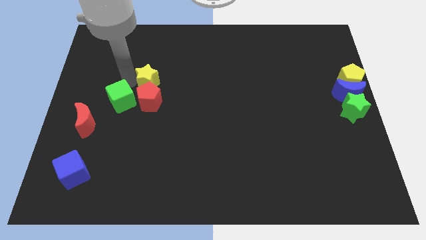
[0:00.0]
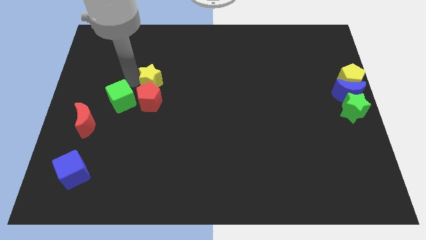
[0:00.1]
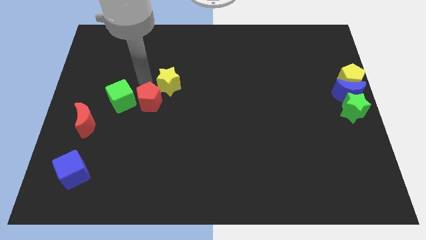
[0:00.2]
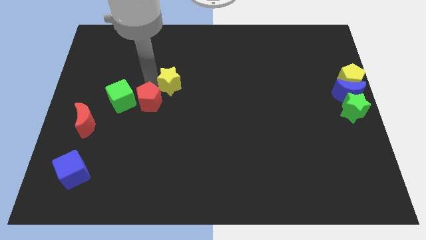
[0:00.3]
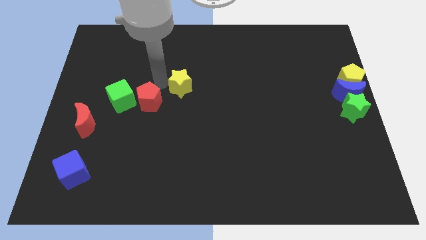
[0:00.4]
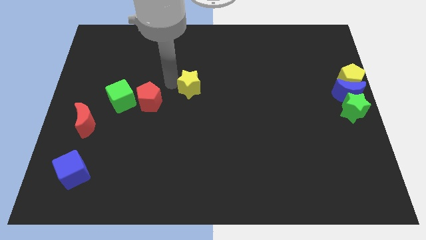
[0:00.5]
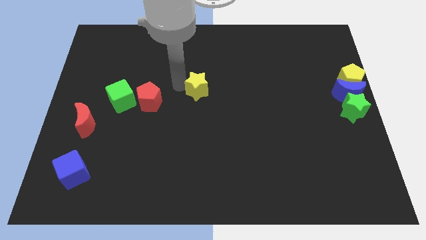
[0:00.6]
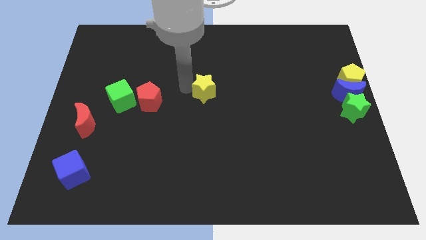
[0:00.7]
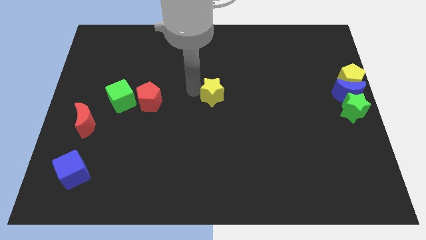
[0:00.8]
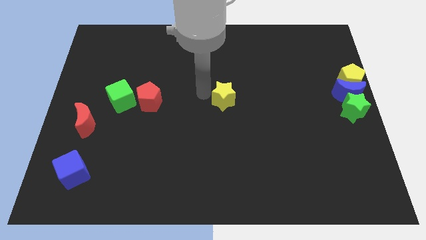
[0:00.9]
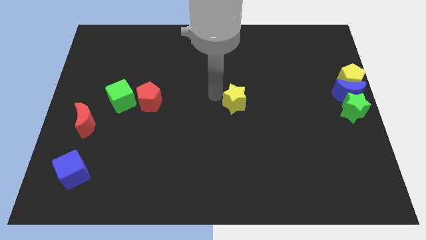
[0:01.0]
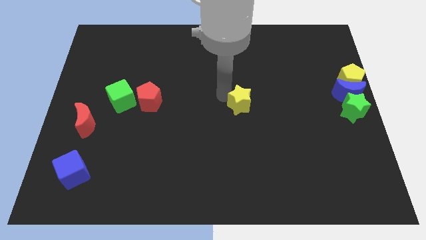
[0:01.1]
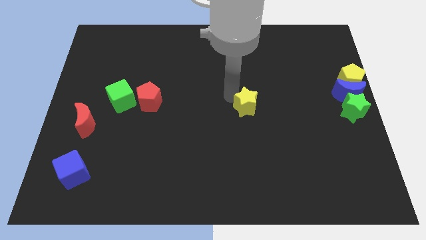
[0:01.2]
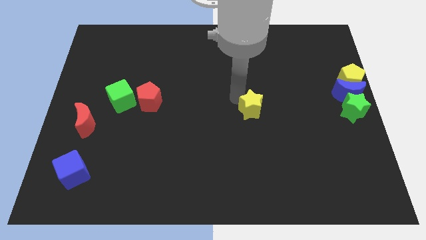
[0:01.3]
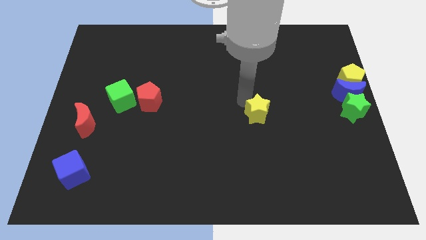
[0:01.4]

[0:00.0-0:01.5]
separate yellow star from the red pentagon

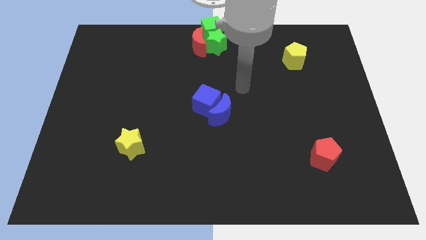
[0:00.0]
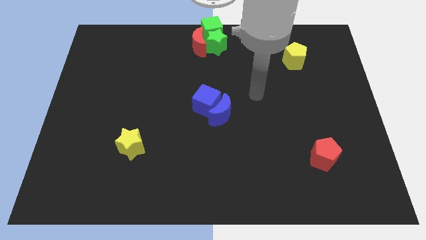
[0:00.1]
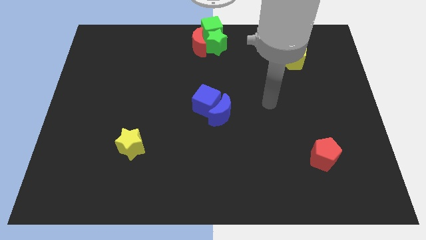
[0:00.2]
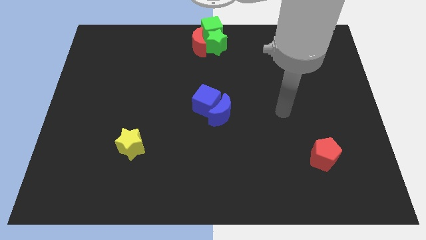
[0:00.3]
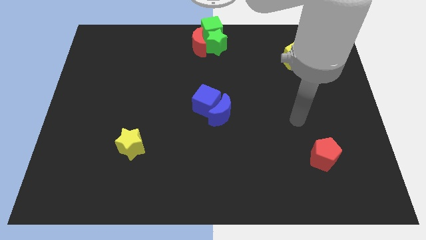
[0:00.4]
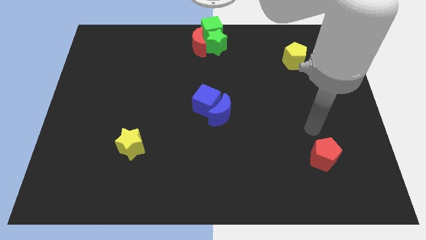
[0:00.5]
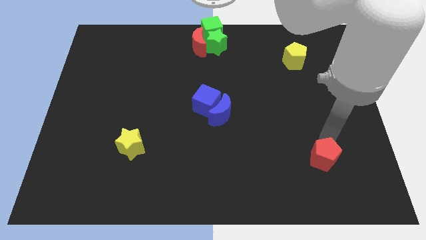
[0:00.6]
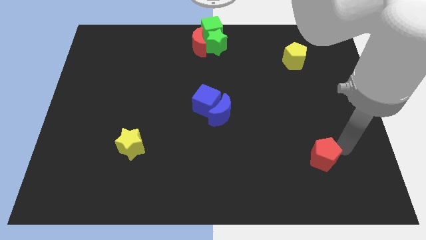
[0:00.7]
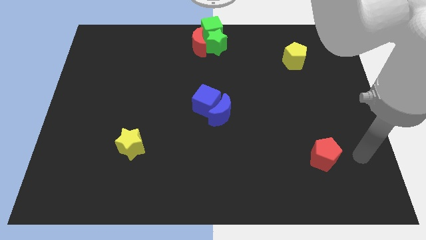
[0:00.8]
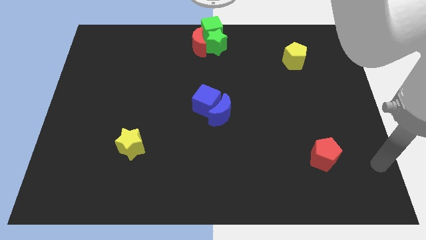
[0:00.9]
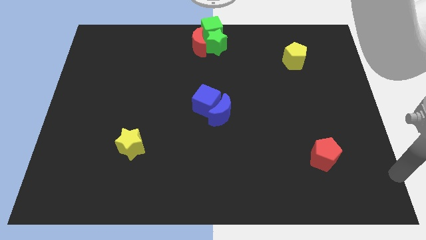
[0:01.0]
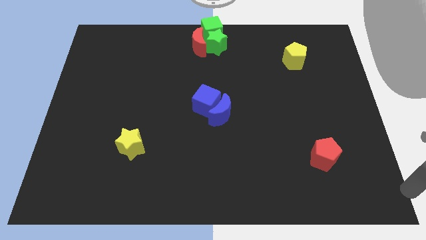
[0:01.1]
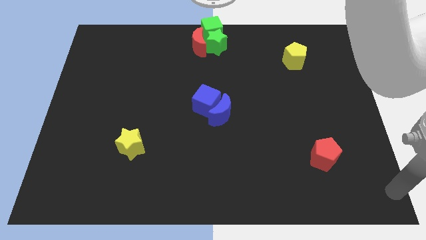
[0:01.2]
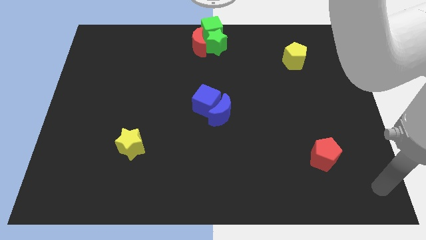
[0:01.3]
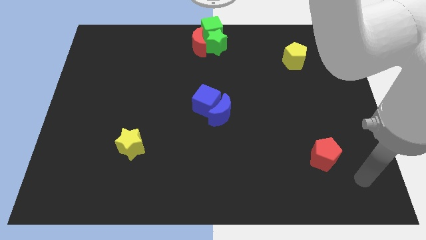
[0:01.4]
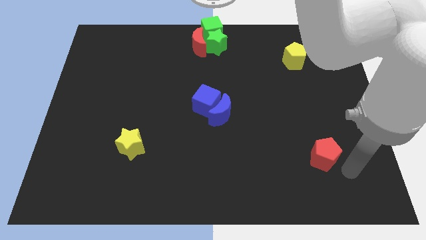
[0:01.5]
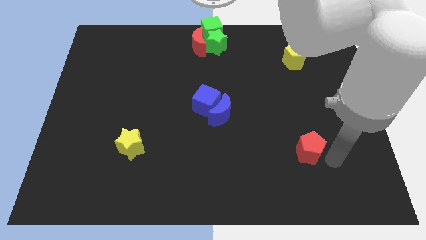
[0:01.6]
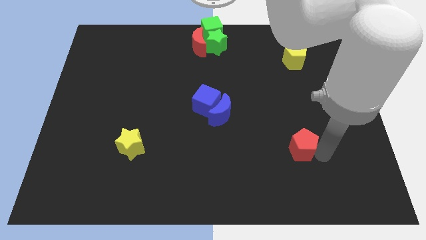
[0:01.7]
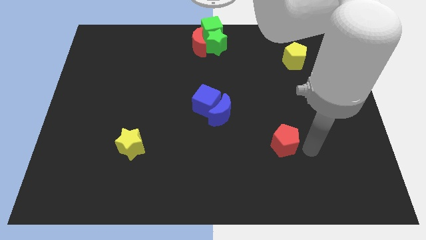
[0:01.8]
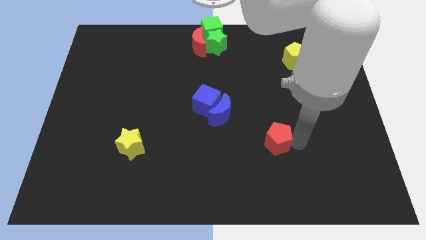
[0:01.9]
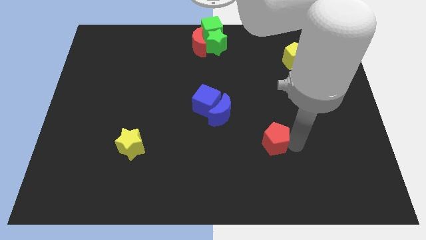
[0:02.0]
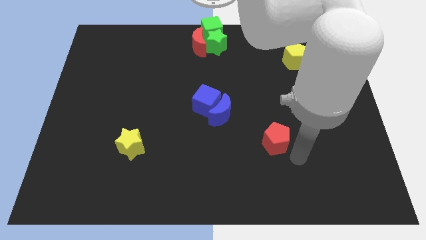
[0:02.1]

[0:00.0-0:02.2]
move the red pentagon towards below to the blue moon

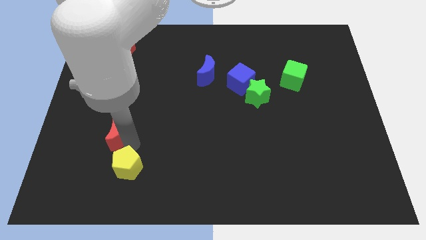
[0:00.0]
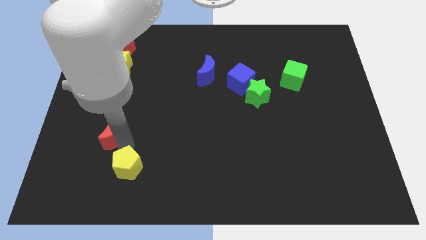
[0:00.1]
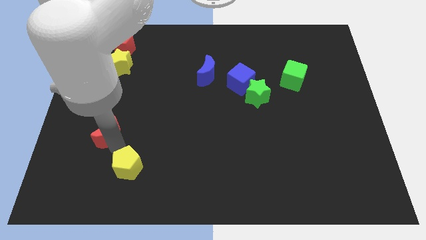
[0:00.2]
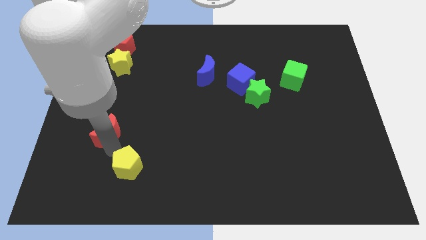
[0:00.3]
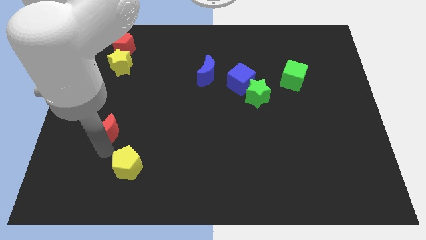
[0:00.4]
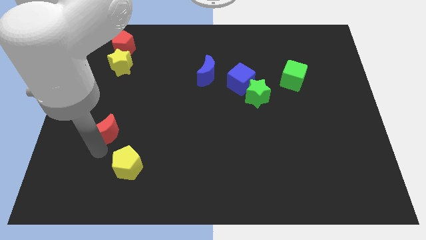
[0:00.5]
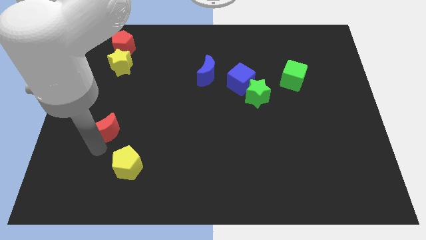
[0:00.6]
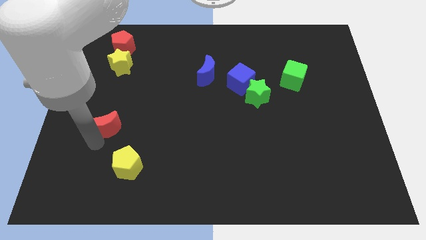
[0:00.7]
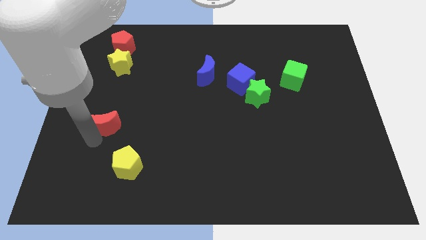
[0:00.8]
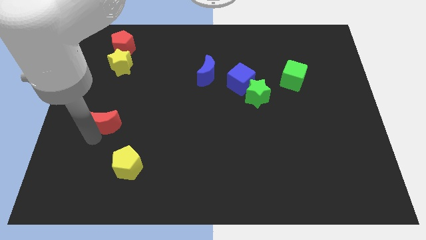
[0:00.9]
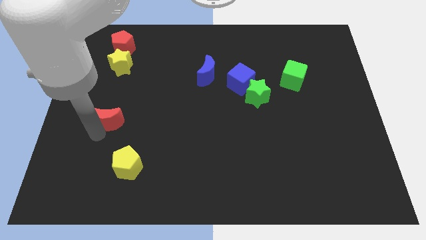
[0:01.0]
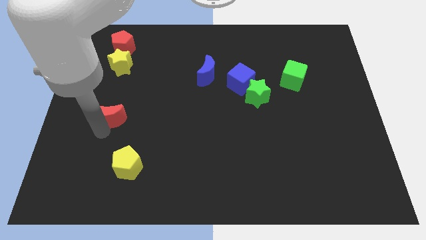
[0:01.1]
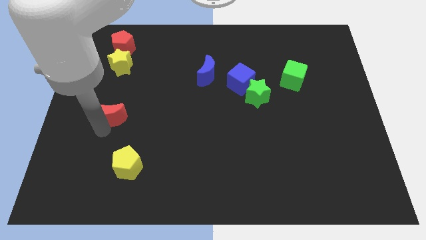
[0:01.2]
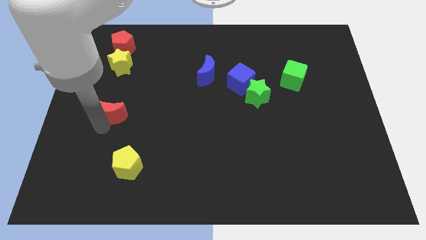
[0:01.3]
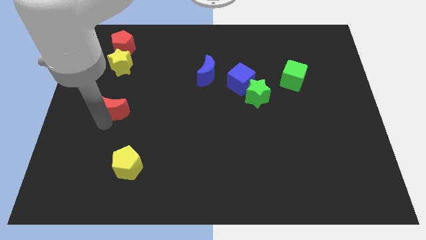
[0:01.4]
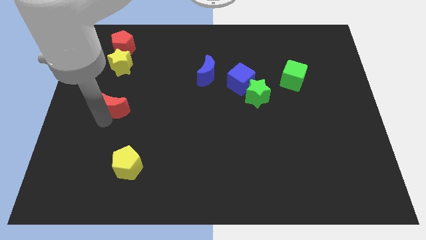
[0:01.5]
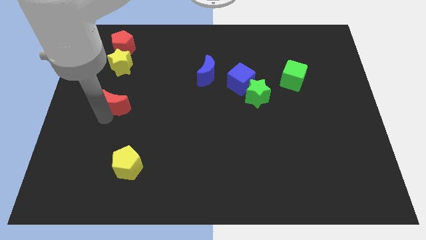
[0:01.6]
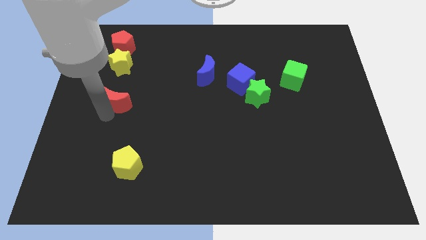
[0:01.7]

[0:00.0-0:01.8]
push the red moon closer to the yellow star

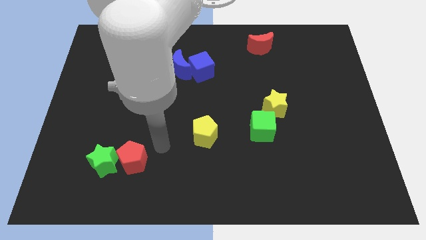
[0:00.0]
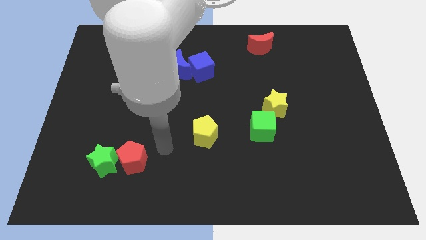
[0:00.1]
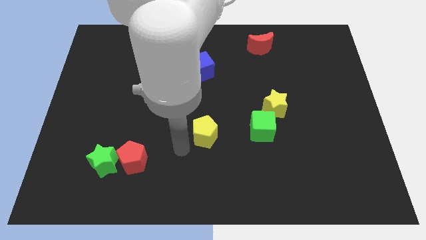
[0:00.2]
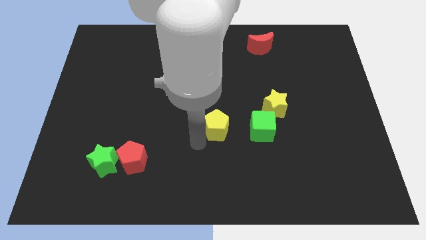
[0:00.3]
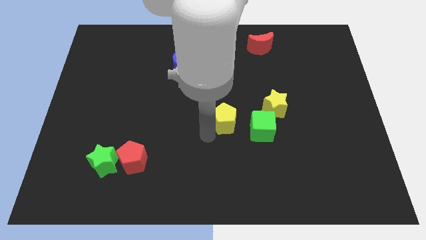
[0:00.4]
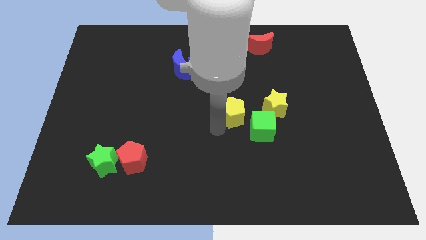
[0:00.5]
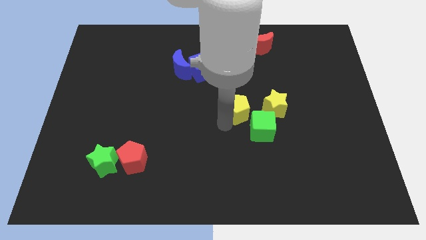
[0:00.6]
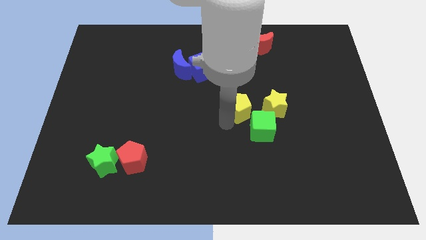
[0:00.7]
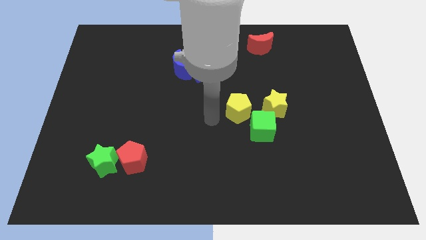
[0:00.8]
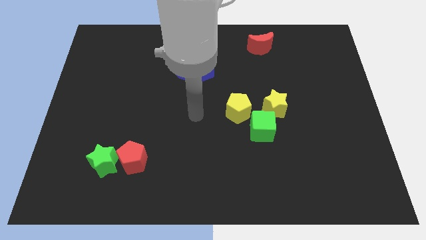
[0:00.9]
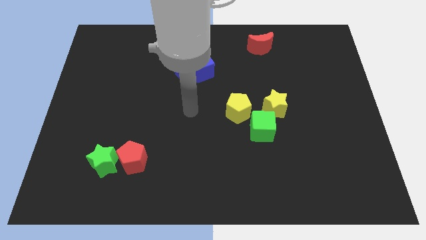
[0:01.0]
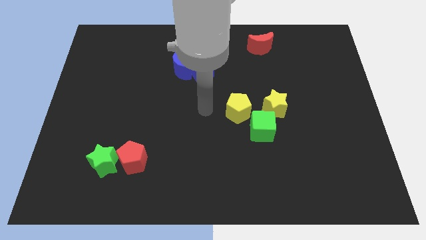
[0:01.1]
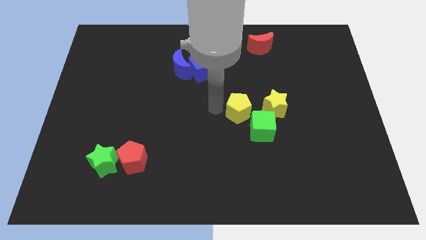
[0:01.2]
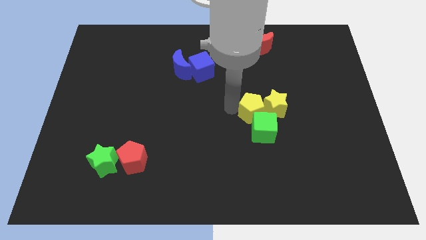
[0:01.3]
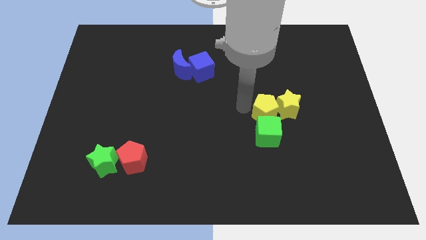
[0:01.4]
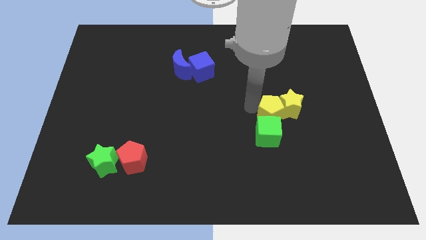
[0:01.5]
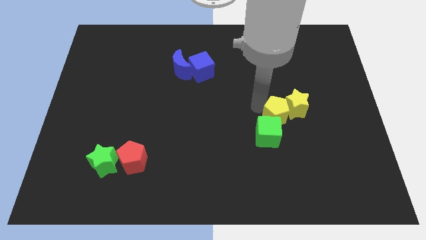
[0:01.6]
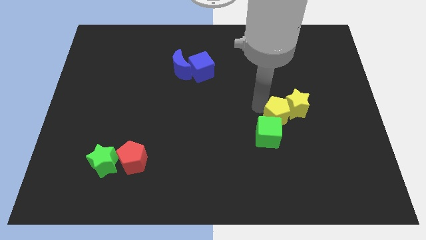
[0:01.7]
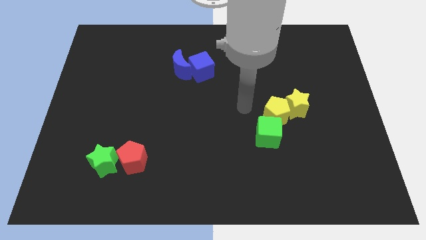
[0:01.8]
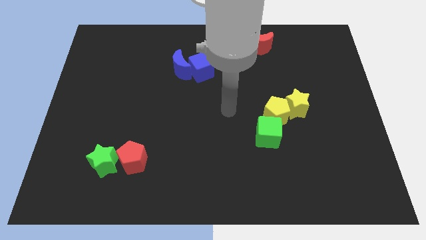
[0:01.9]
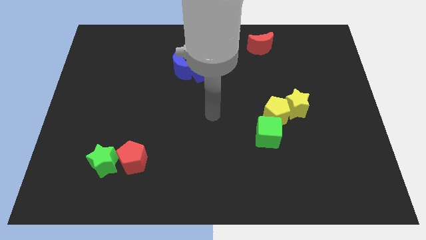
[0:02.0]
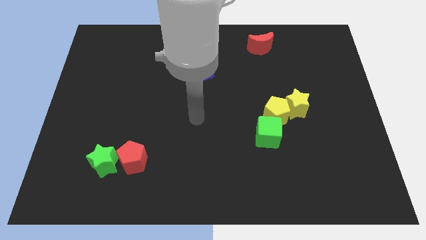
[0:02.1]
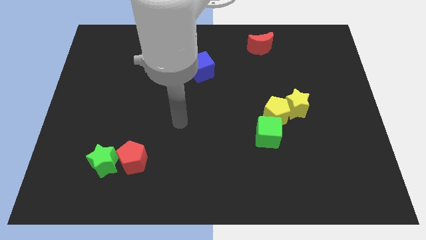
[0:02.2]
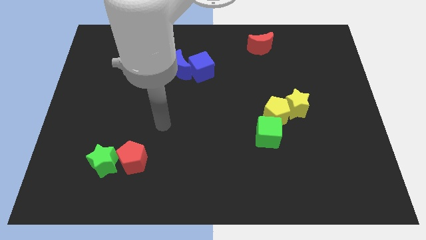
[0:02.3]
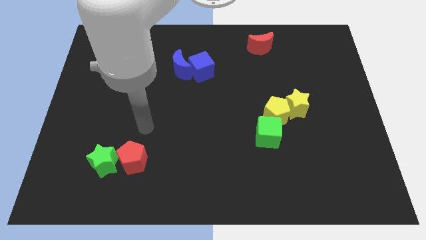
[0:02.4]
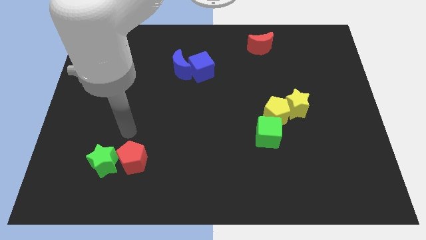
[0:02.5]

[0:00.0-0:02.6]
move the yellow pentagon into the yellow star

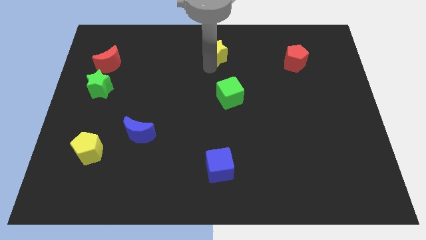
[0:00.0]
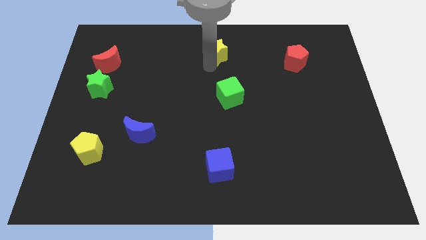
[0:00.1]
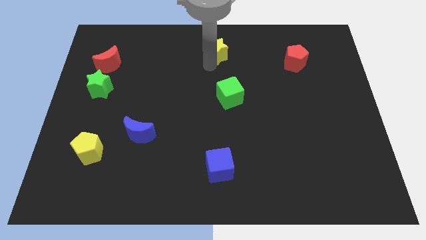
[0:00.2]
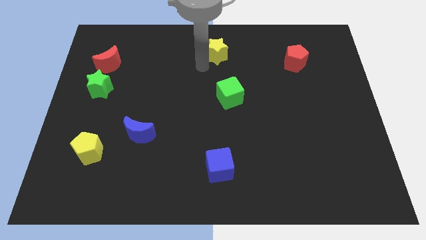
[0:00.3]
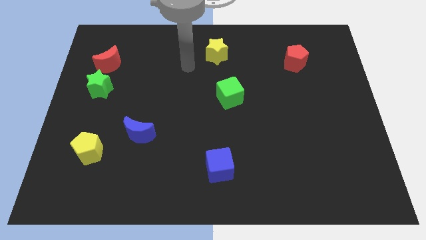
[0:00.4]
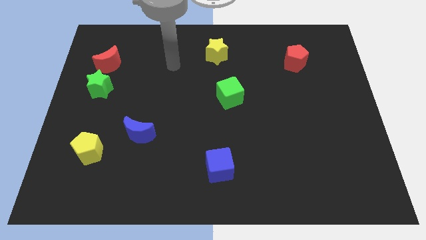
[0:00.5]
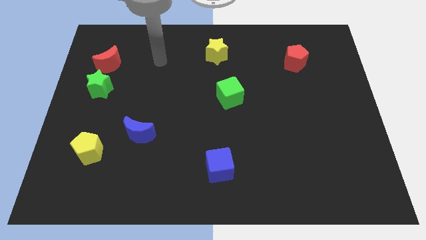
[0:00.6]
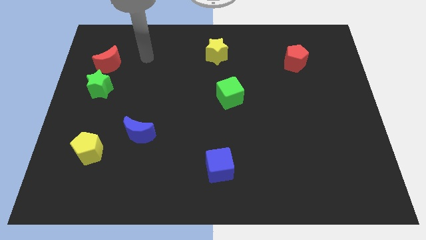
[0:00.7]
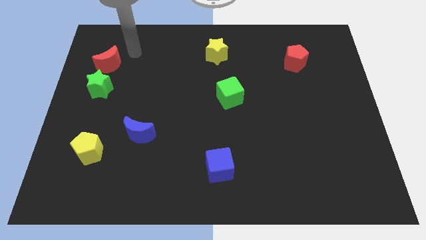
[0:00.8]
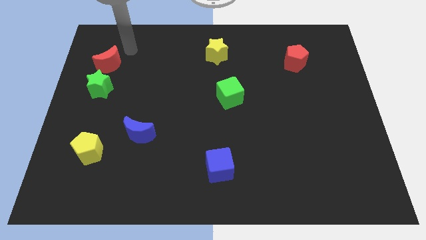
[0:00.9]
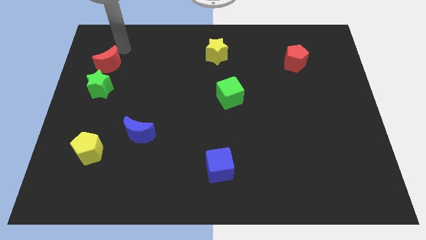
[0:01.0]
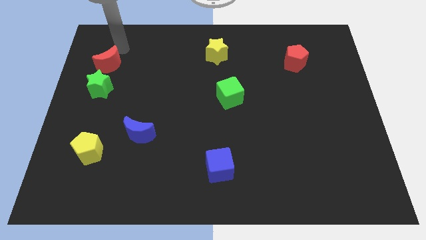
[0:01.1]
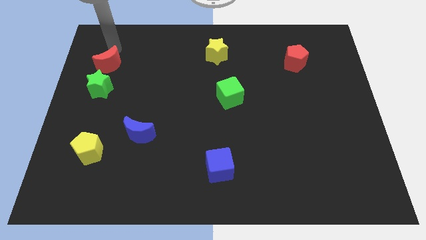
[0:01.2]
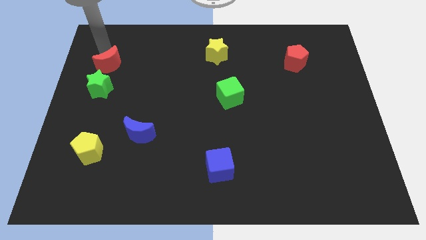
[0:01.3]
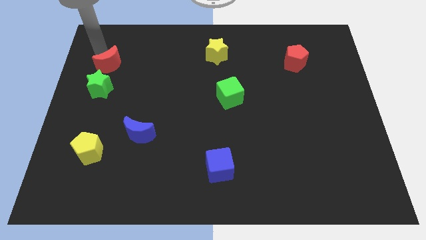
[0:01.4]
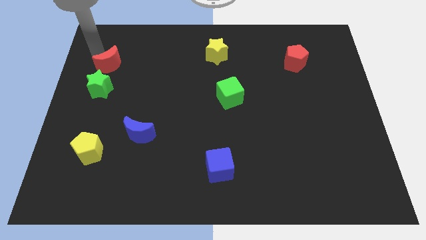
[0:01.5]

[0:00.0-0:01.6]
move your arm to the top of the red crescent
